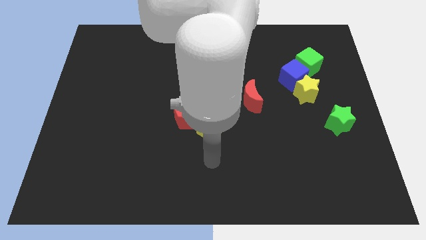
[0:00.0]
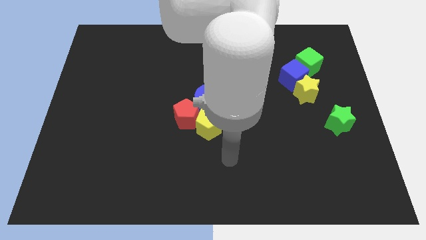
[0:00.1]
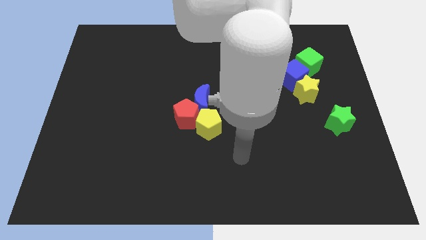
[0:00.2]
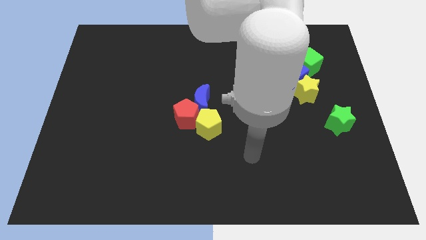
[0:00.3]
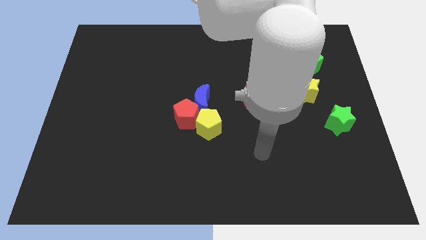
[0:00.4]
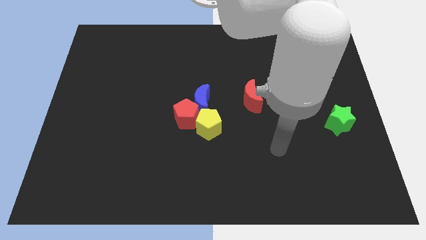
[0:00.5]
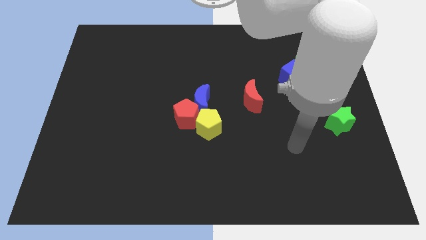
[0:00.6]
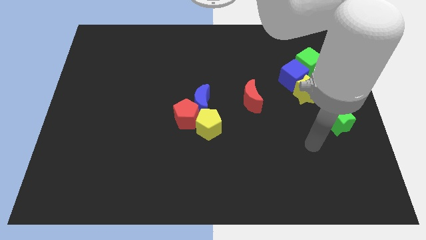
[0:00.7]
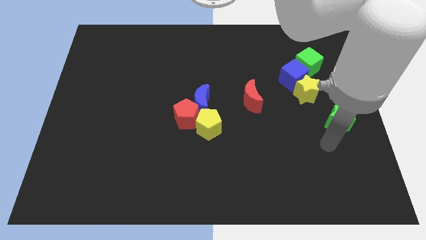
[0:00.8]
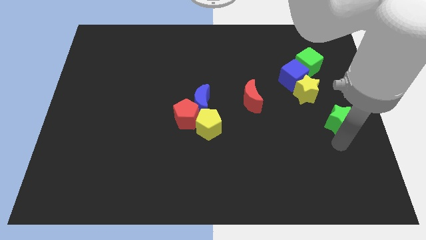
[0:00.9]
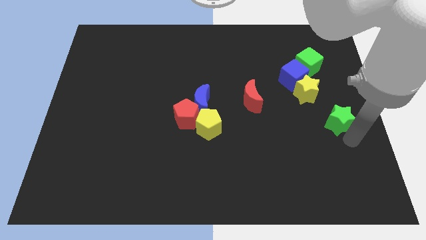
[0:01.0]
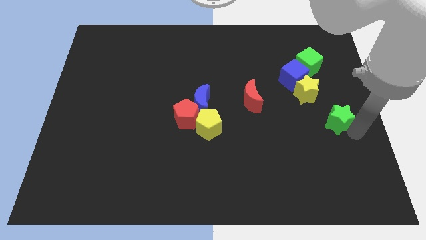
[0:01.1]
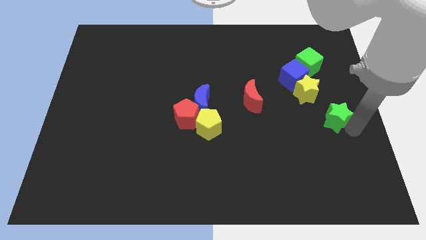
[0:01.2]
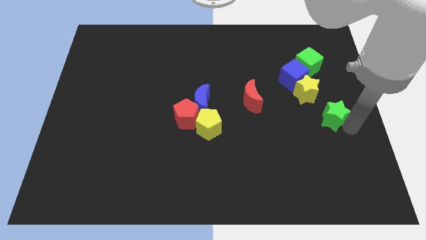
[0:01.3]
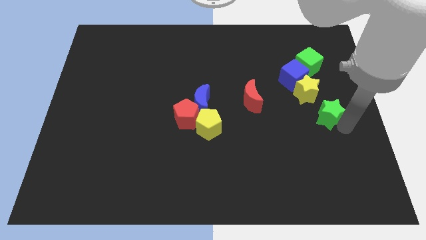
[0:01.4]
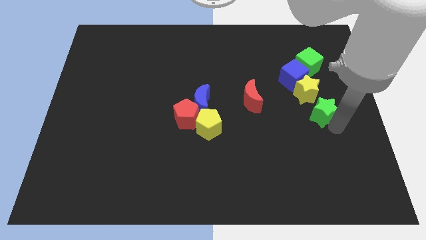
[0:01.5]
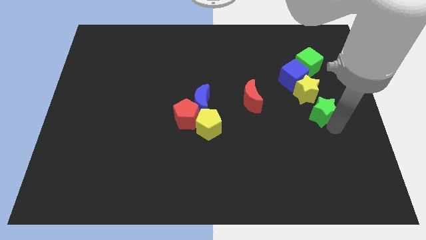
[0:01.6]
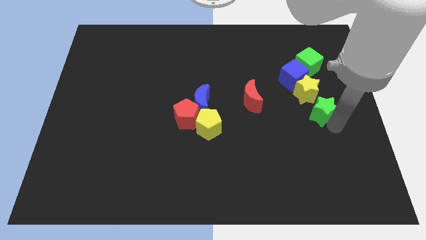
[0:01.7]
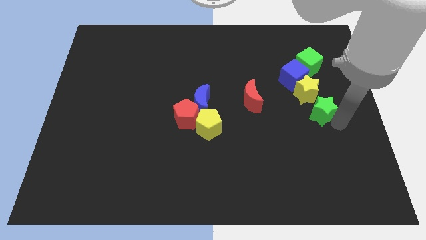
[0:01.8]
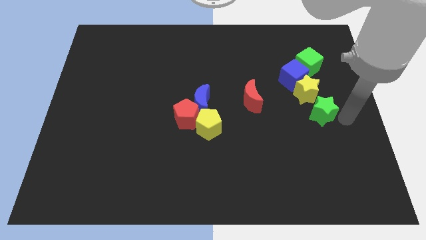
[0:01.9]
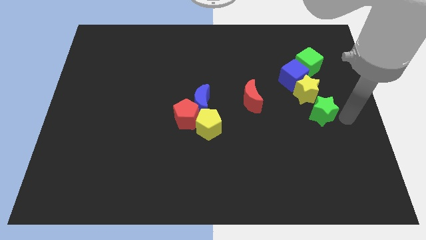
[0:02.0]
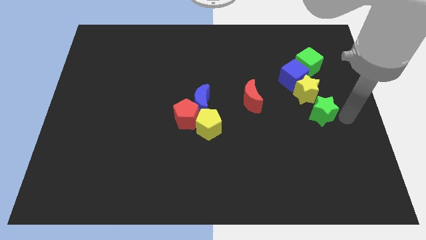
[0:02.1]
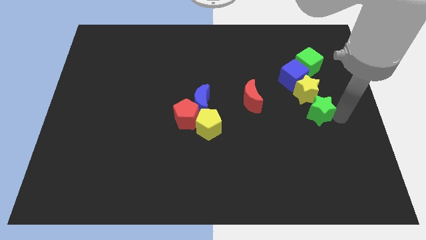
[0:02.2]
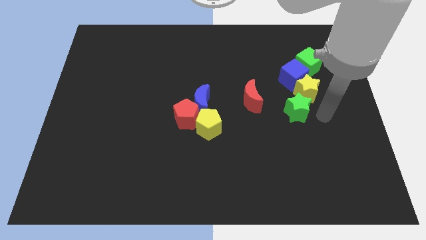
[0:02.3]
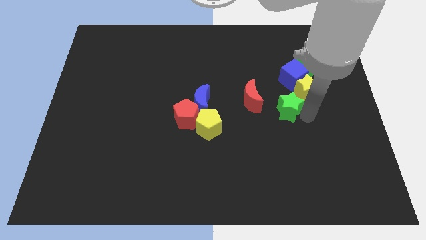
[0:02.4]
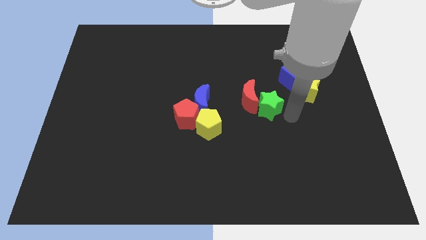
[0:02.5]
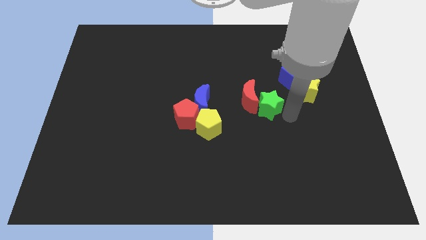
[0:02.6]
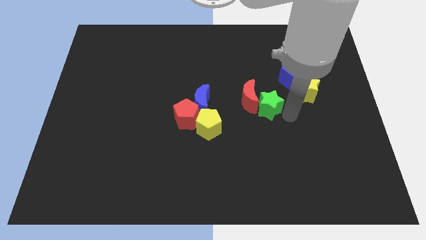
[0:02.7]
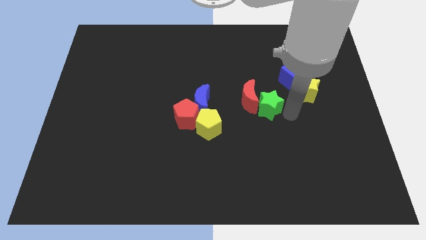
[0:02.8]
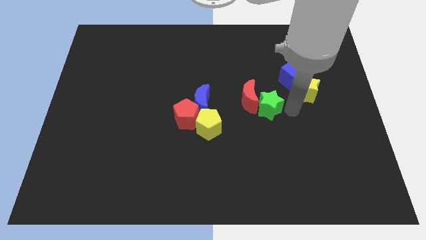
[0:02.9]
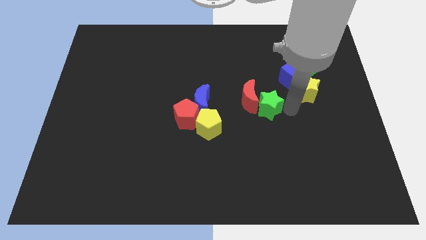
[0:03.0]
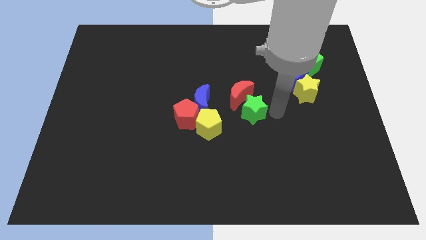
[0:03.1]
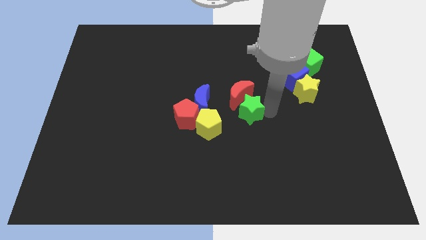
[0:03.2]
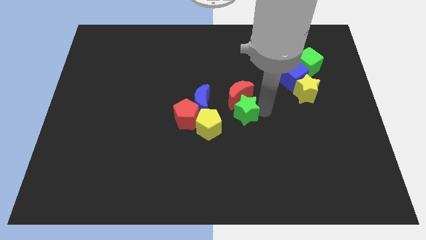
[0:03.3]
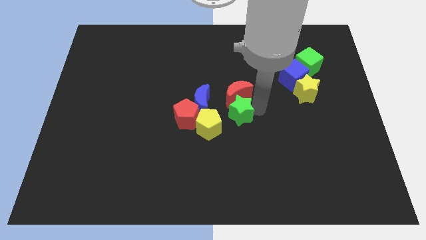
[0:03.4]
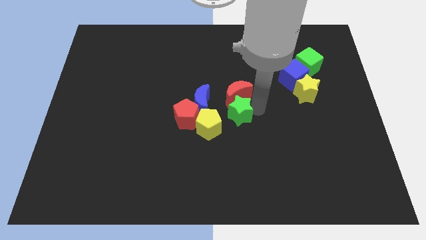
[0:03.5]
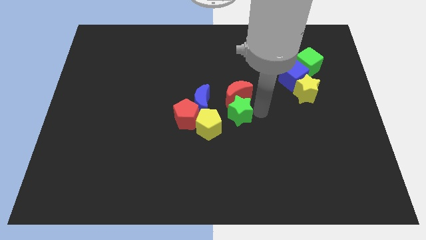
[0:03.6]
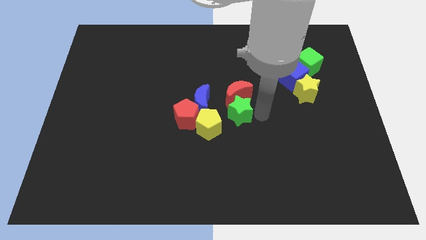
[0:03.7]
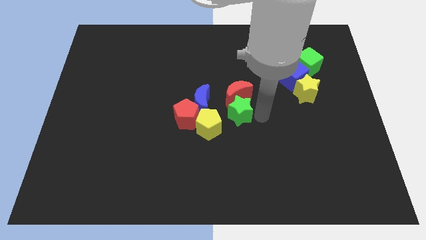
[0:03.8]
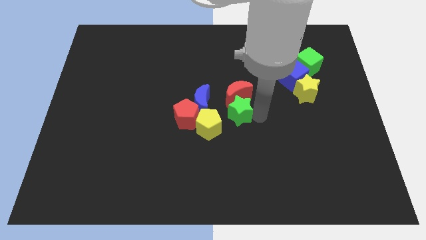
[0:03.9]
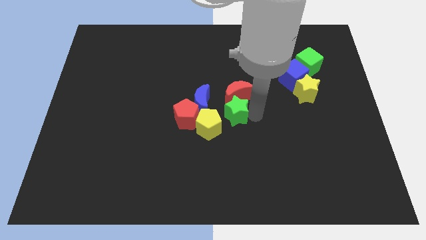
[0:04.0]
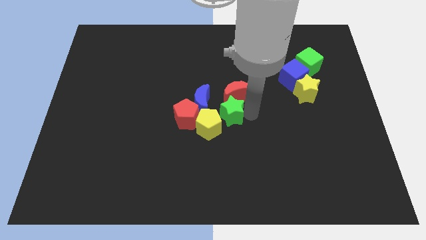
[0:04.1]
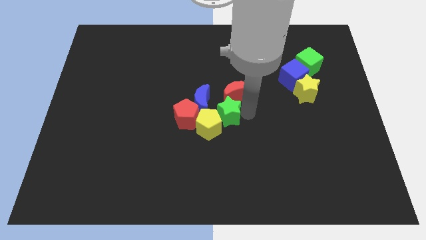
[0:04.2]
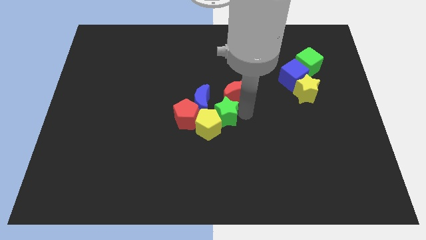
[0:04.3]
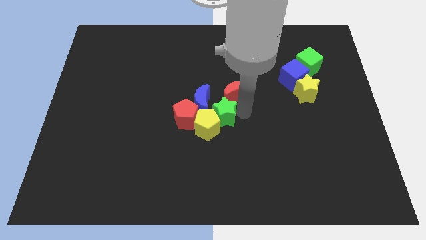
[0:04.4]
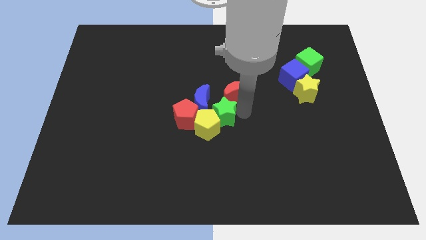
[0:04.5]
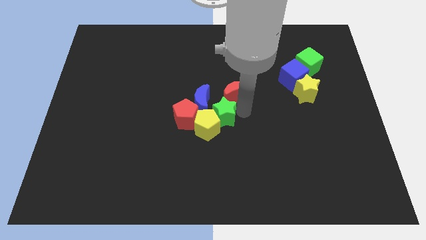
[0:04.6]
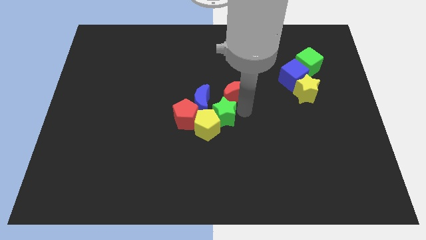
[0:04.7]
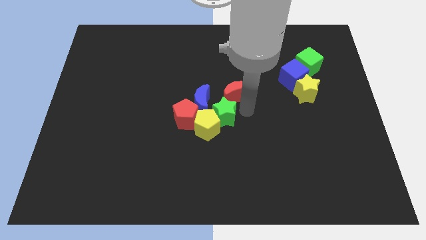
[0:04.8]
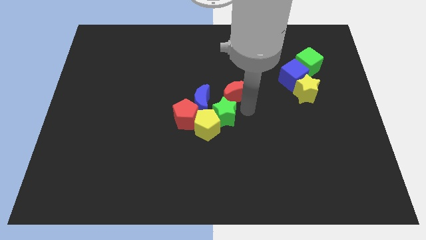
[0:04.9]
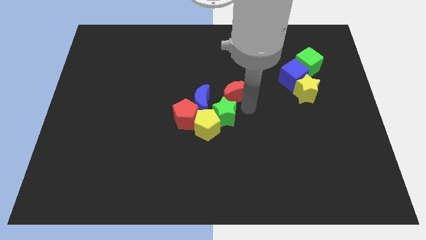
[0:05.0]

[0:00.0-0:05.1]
move the green star into the group of blocks

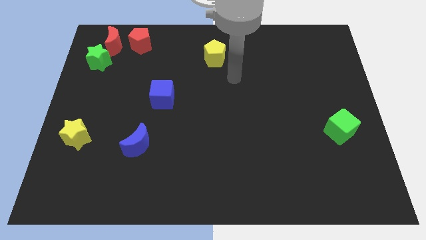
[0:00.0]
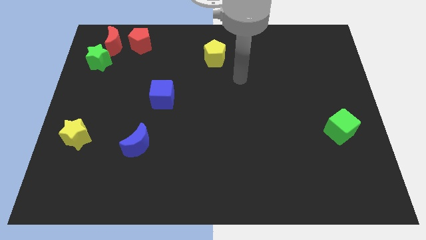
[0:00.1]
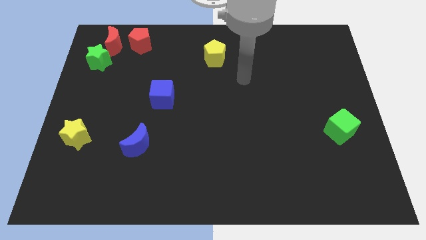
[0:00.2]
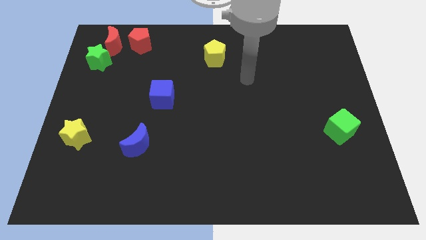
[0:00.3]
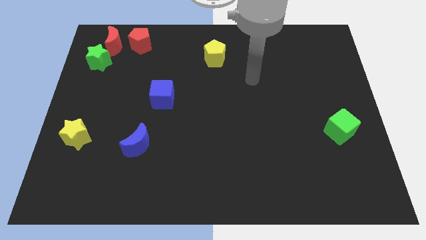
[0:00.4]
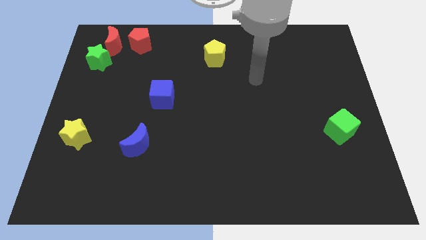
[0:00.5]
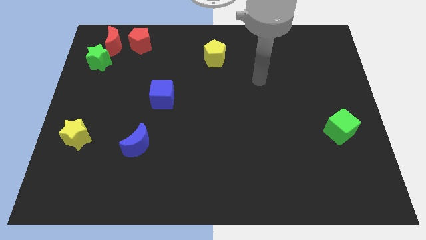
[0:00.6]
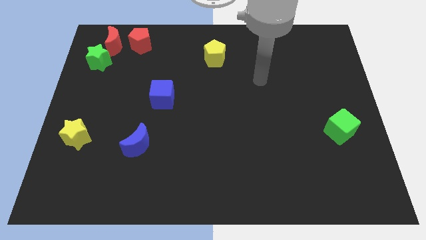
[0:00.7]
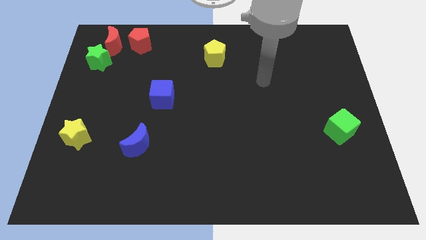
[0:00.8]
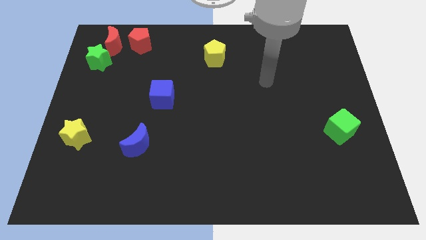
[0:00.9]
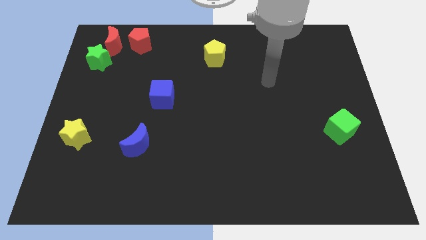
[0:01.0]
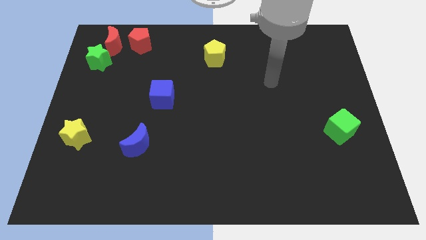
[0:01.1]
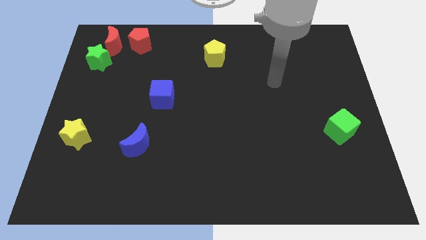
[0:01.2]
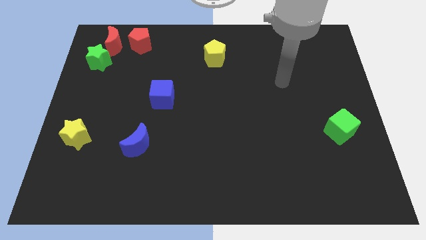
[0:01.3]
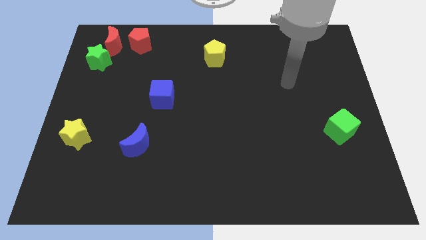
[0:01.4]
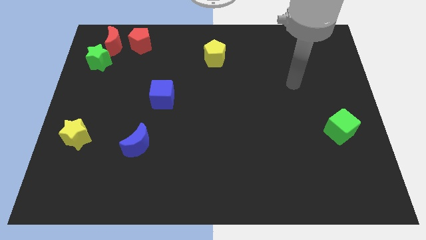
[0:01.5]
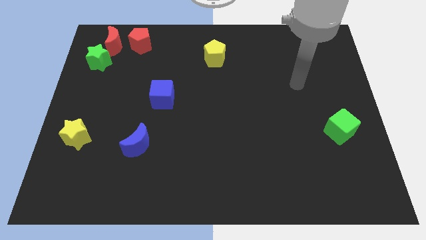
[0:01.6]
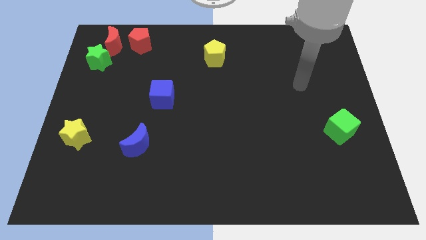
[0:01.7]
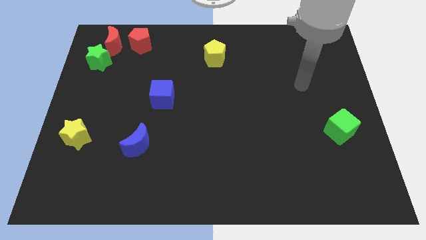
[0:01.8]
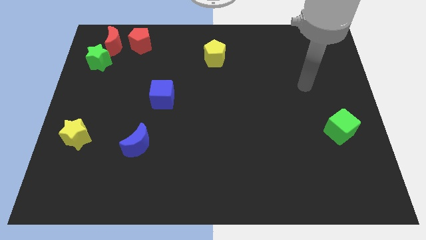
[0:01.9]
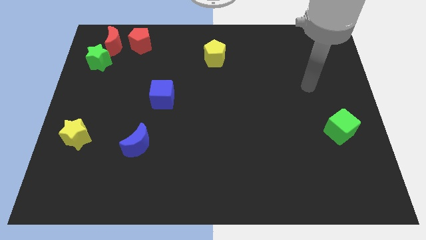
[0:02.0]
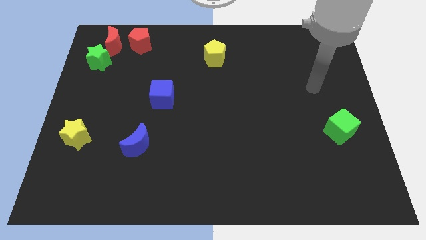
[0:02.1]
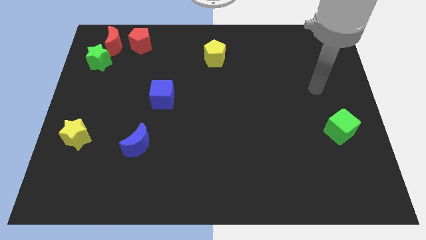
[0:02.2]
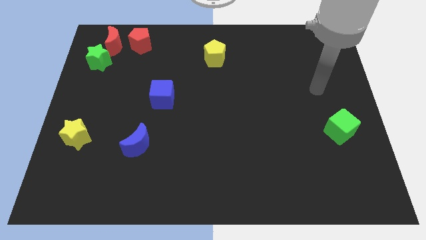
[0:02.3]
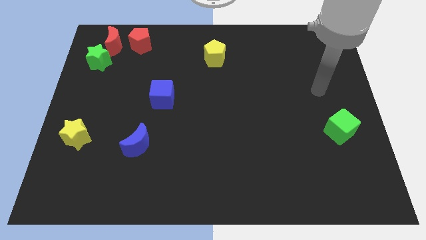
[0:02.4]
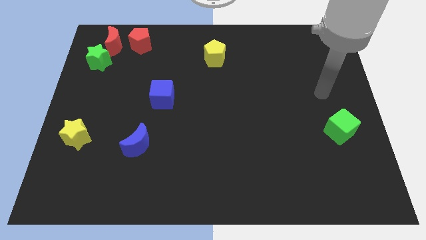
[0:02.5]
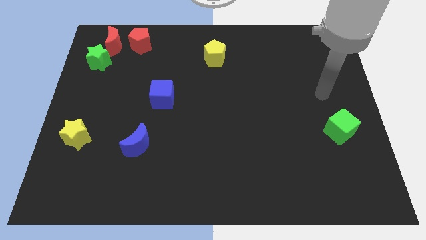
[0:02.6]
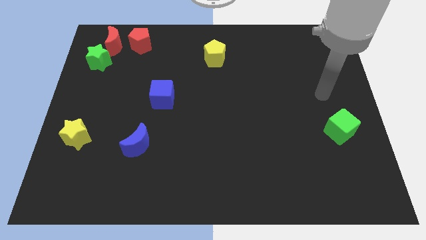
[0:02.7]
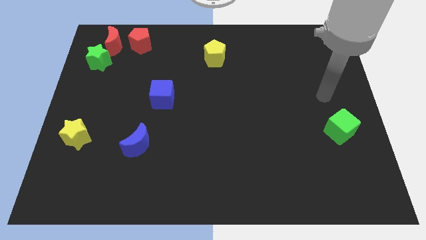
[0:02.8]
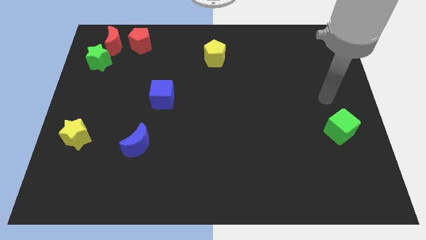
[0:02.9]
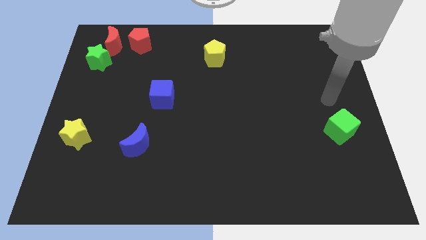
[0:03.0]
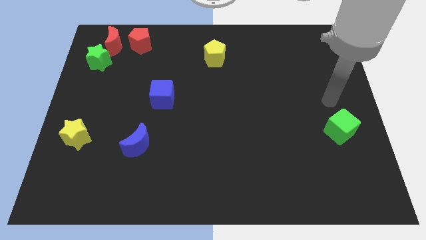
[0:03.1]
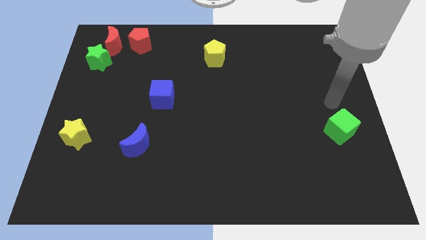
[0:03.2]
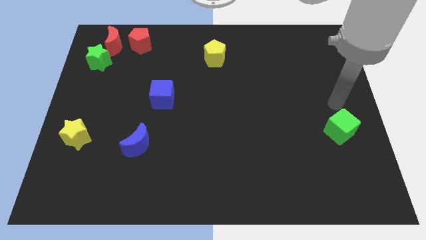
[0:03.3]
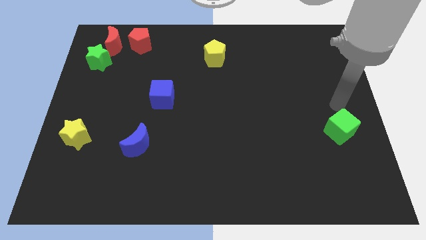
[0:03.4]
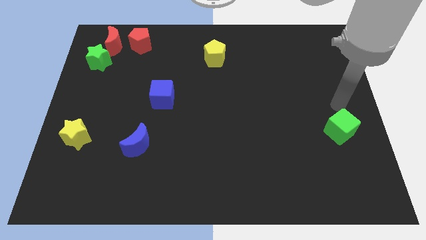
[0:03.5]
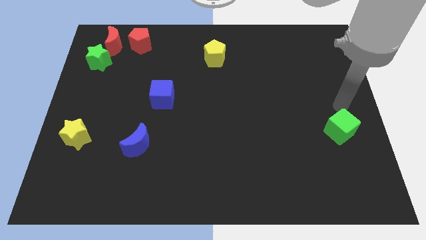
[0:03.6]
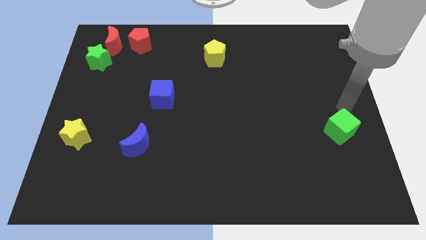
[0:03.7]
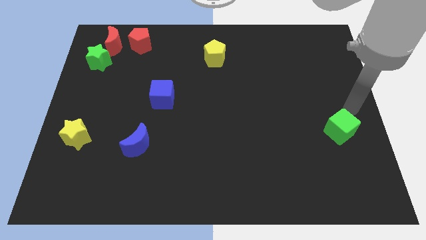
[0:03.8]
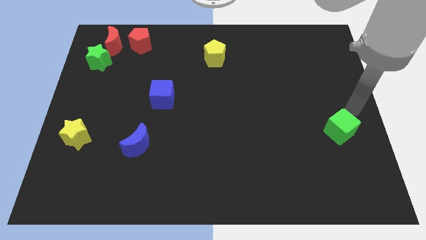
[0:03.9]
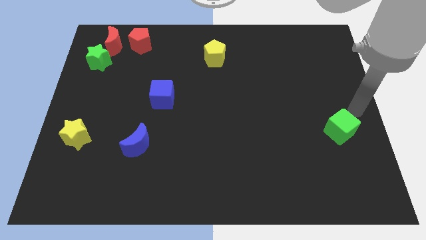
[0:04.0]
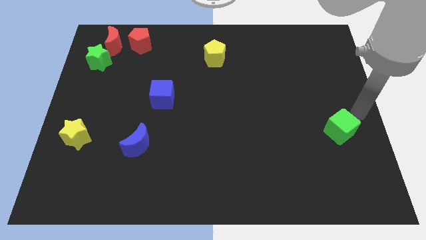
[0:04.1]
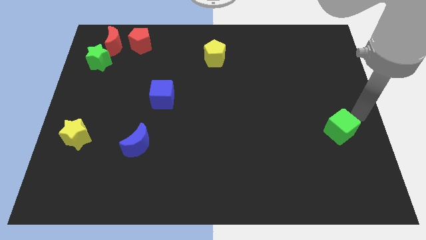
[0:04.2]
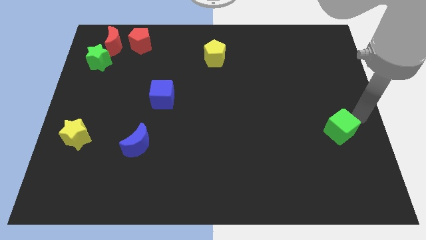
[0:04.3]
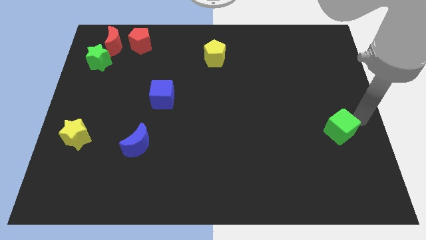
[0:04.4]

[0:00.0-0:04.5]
move your hand right to the green cube
